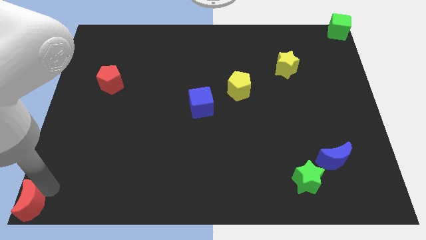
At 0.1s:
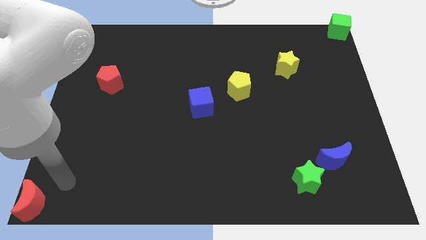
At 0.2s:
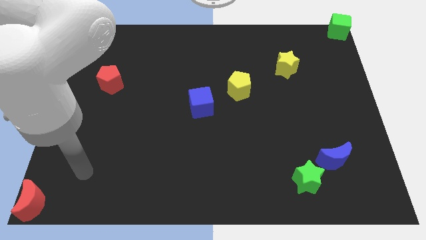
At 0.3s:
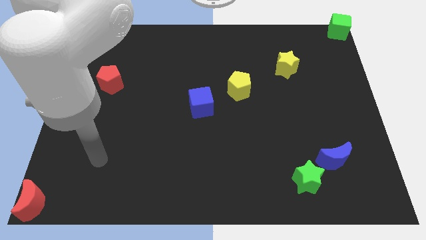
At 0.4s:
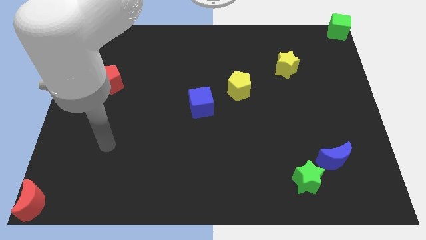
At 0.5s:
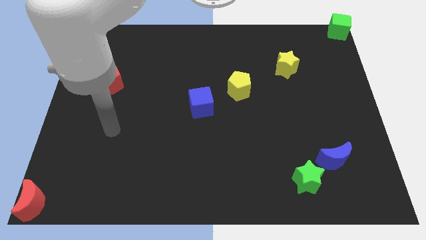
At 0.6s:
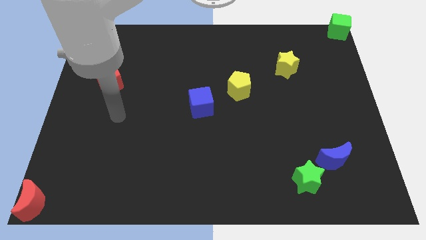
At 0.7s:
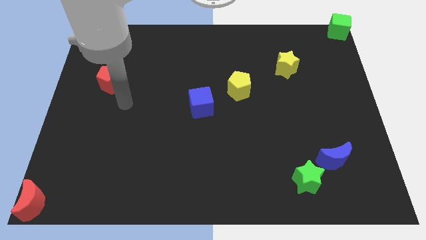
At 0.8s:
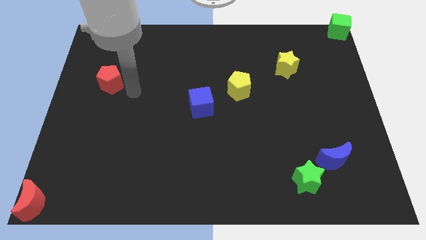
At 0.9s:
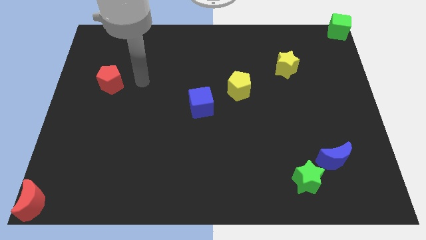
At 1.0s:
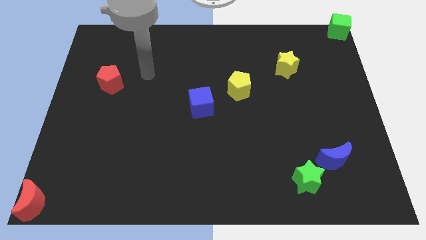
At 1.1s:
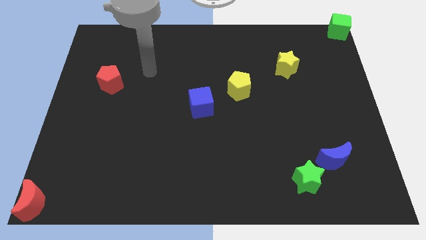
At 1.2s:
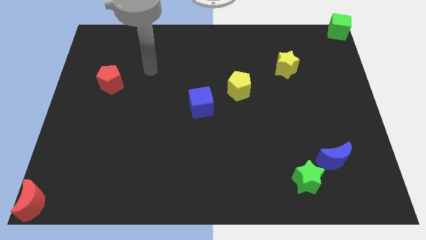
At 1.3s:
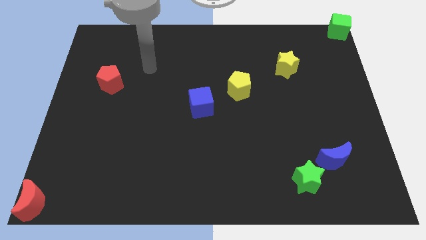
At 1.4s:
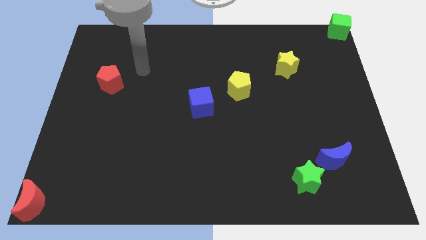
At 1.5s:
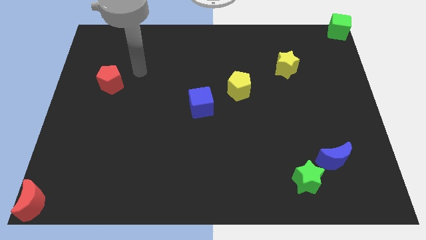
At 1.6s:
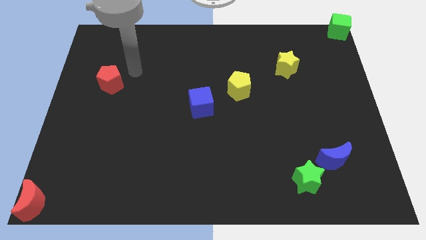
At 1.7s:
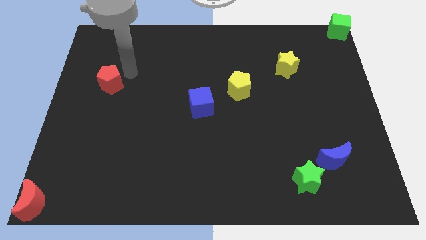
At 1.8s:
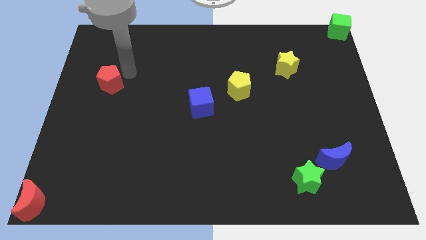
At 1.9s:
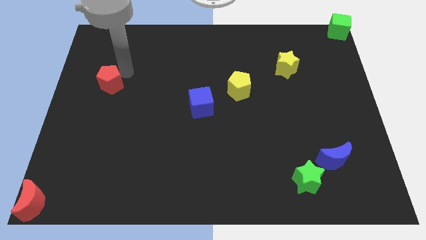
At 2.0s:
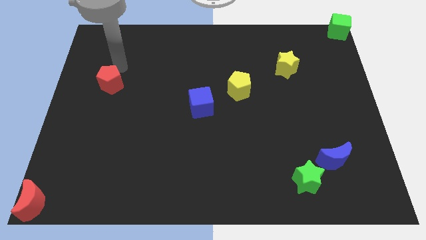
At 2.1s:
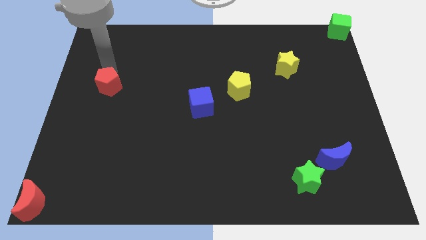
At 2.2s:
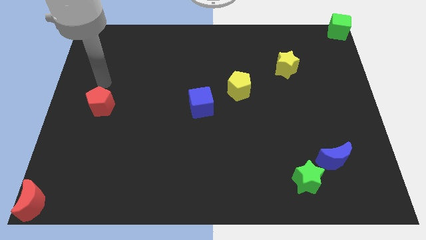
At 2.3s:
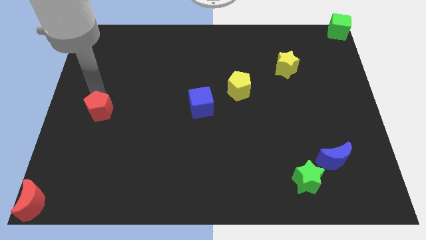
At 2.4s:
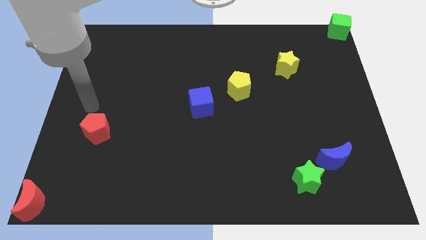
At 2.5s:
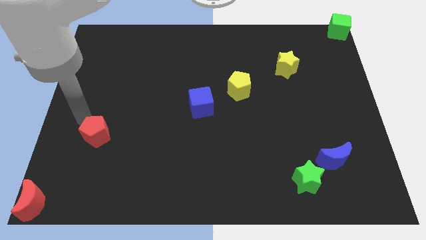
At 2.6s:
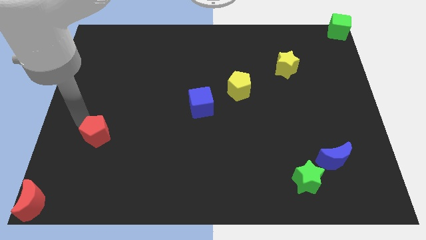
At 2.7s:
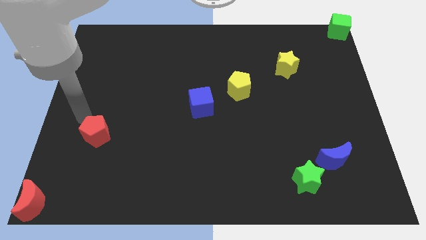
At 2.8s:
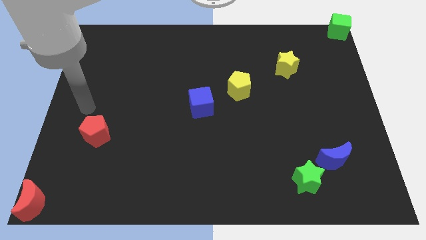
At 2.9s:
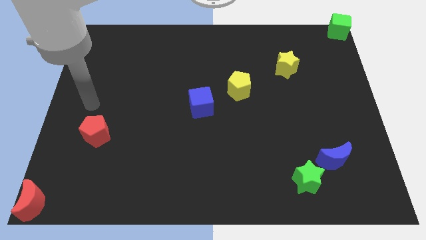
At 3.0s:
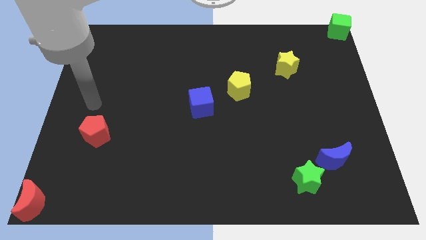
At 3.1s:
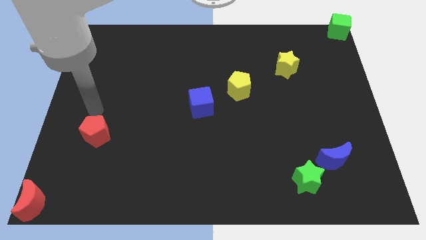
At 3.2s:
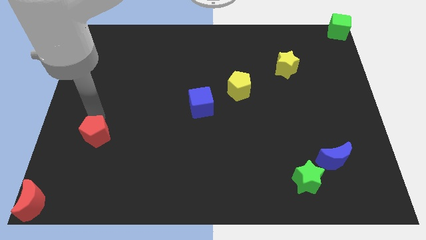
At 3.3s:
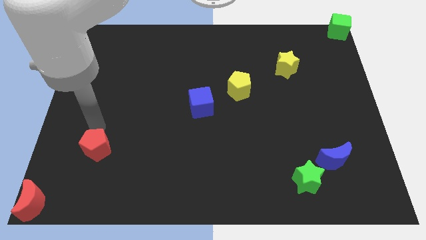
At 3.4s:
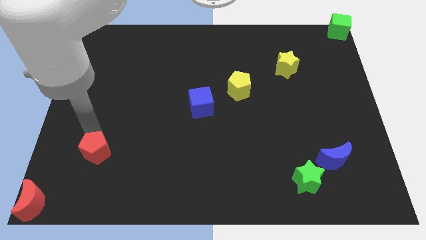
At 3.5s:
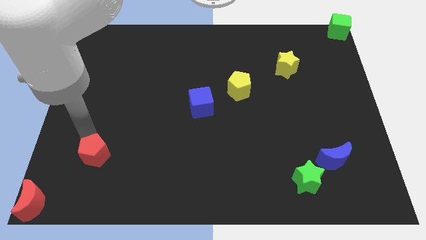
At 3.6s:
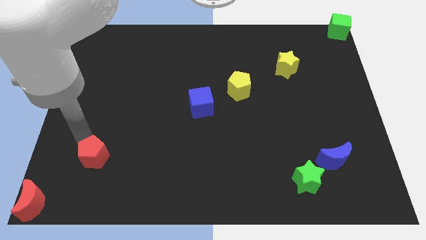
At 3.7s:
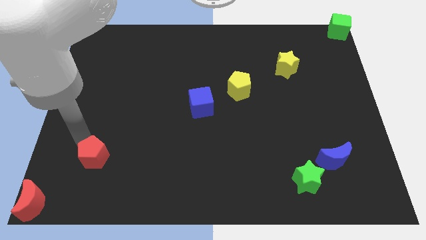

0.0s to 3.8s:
push the red pentagon to the top right of the red crescent

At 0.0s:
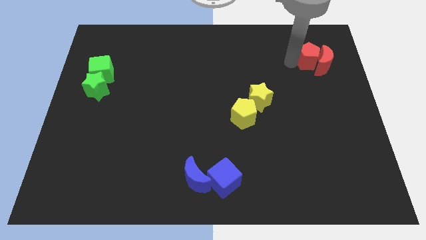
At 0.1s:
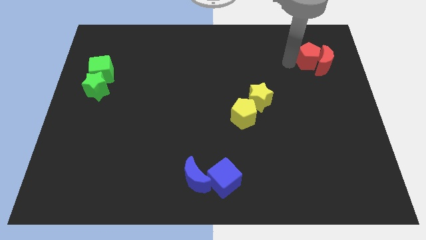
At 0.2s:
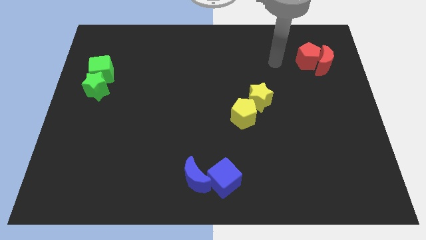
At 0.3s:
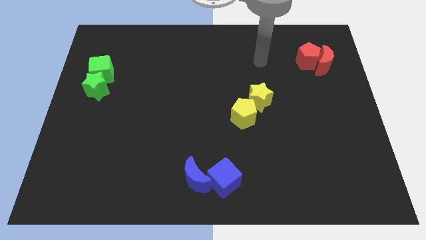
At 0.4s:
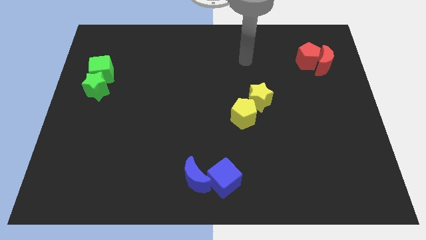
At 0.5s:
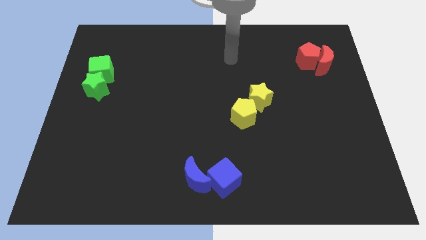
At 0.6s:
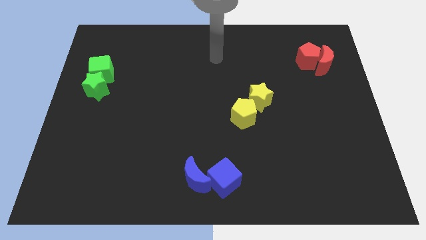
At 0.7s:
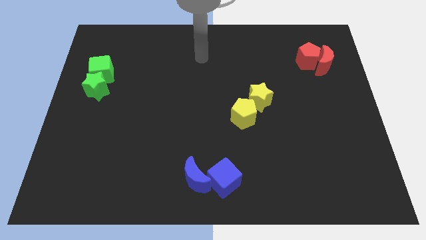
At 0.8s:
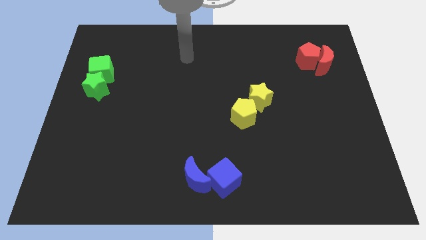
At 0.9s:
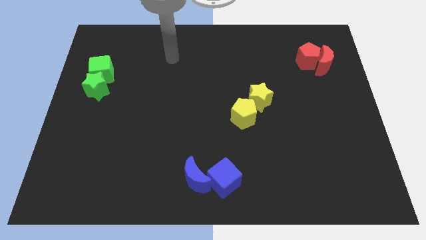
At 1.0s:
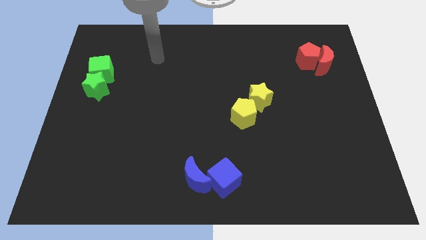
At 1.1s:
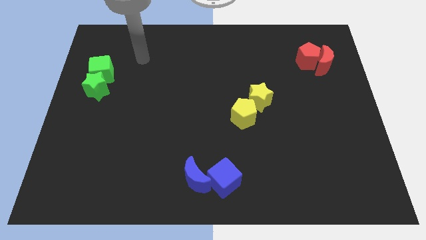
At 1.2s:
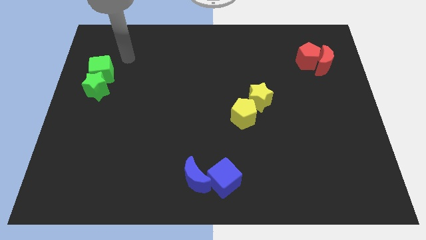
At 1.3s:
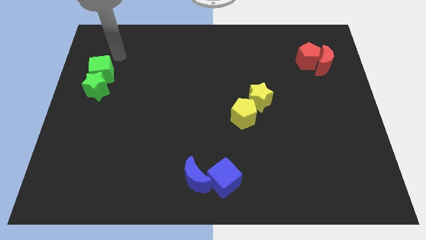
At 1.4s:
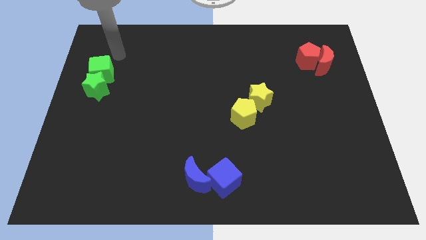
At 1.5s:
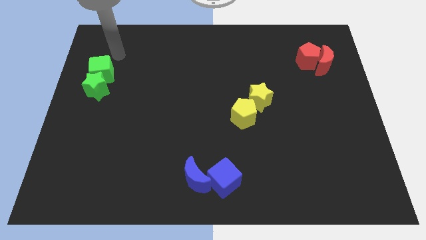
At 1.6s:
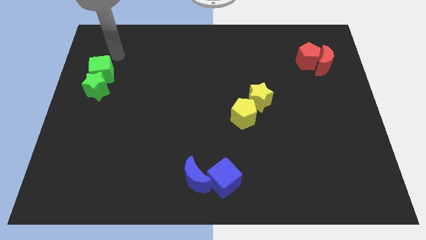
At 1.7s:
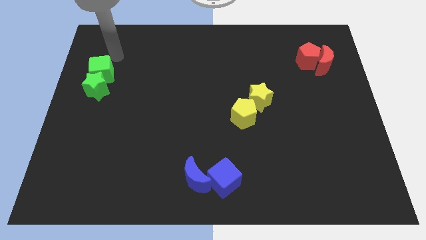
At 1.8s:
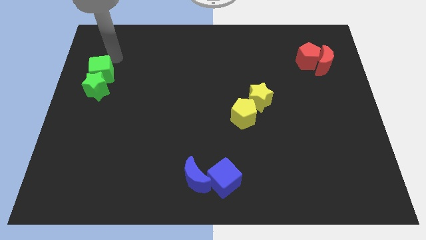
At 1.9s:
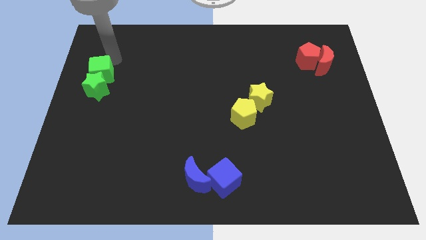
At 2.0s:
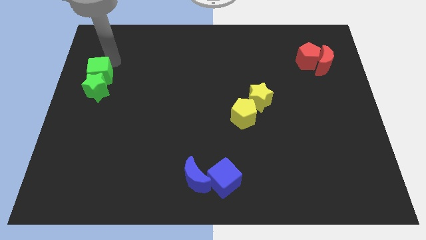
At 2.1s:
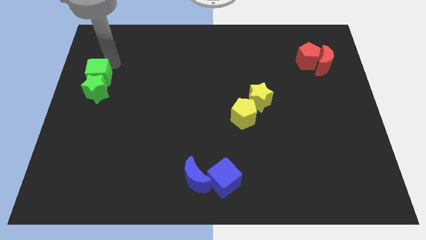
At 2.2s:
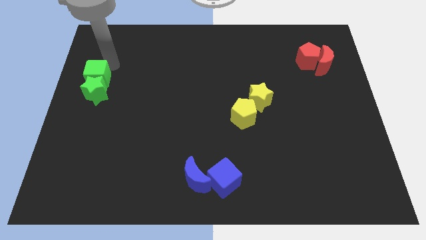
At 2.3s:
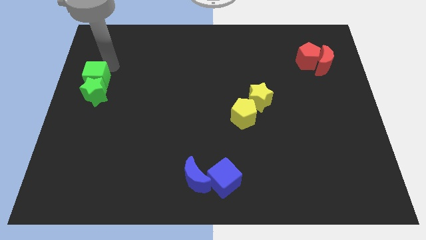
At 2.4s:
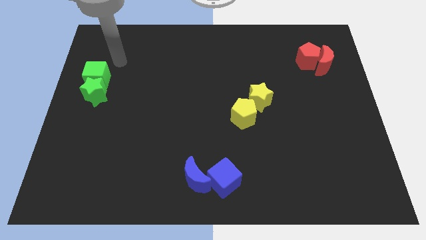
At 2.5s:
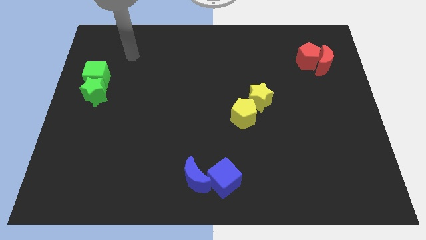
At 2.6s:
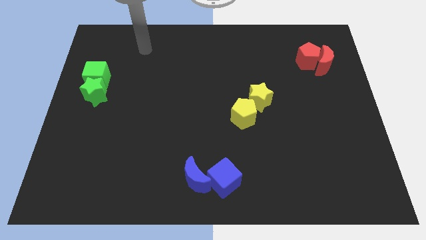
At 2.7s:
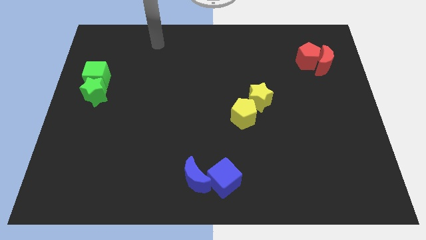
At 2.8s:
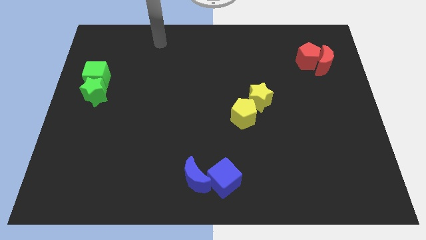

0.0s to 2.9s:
move green cube slightly towards down

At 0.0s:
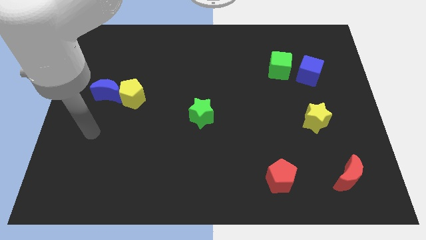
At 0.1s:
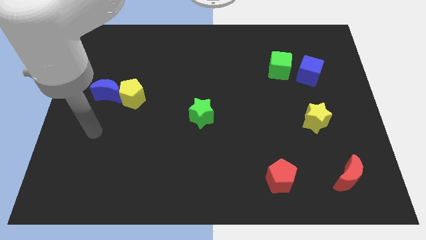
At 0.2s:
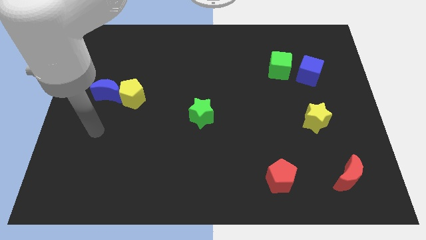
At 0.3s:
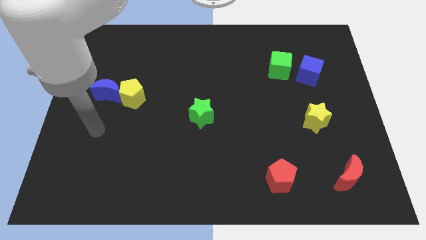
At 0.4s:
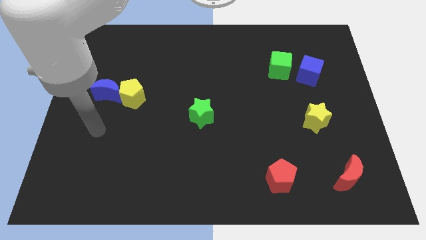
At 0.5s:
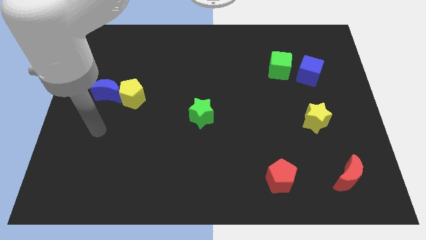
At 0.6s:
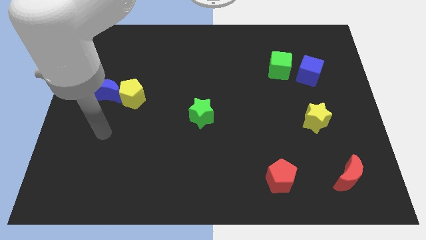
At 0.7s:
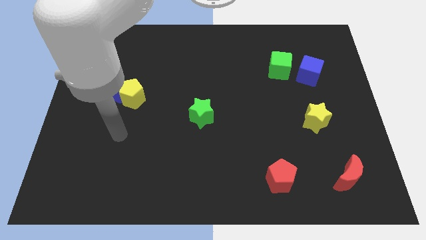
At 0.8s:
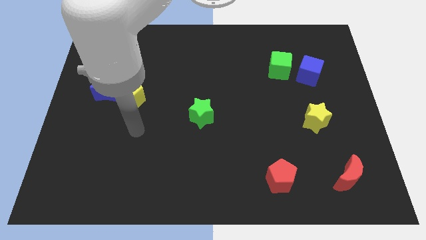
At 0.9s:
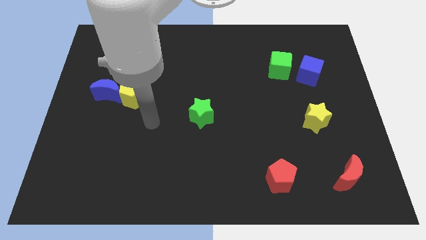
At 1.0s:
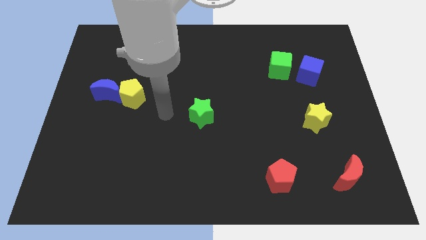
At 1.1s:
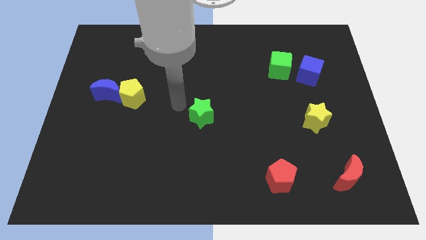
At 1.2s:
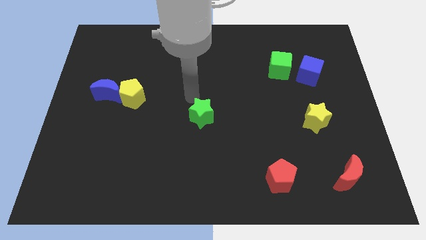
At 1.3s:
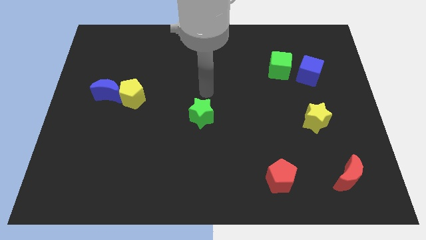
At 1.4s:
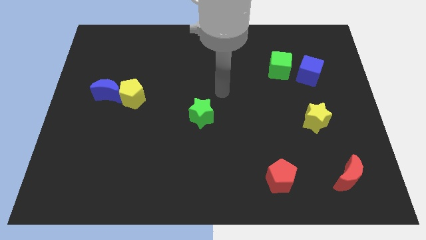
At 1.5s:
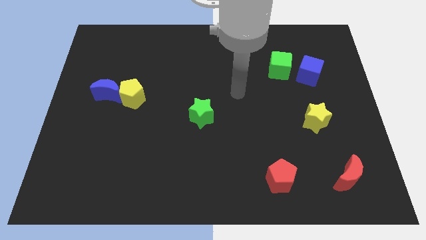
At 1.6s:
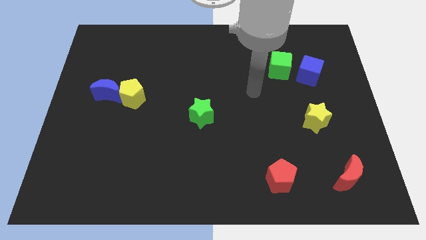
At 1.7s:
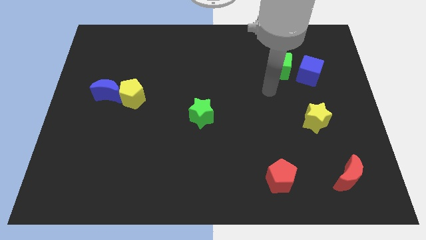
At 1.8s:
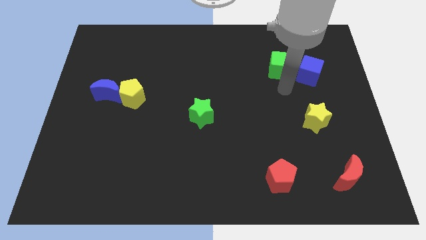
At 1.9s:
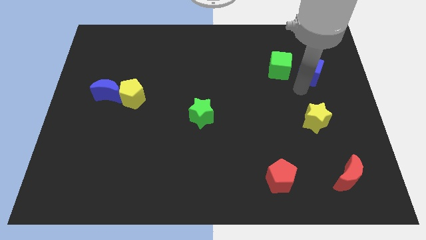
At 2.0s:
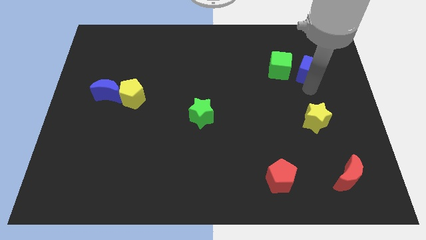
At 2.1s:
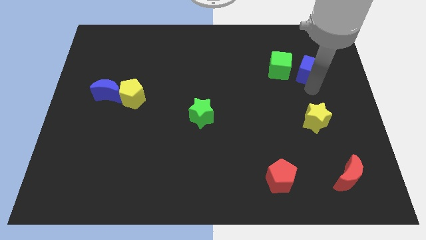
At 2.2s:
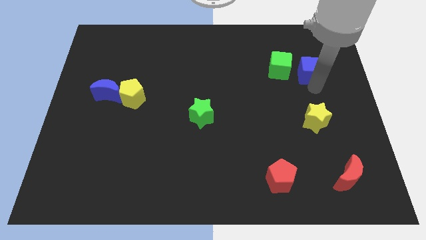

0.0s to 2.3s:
tap bottom side of the blue cube
